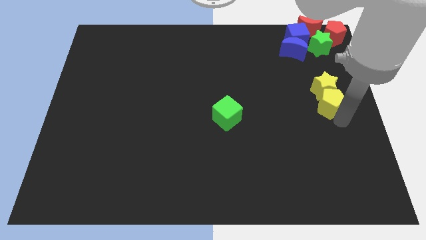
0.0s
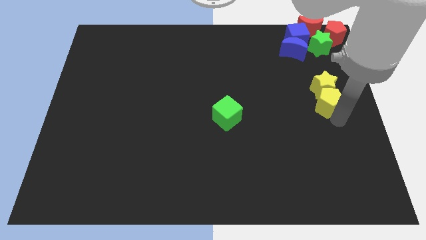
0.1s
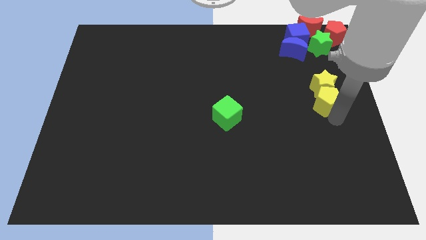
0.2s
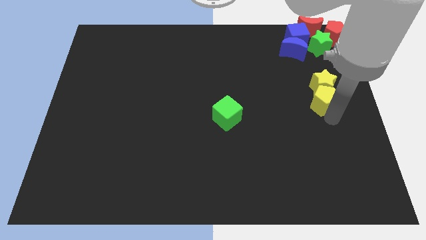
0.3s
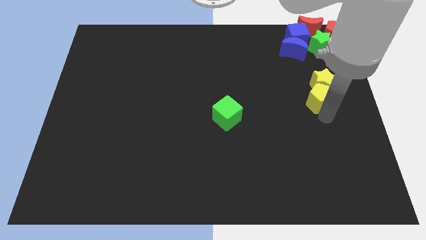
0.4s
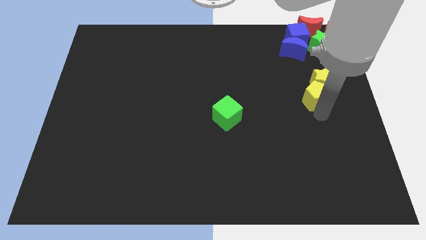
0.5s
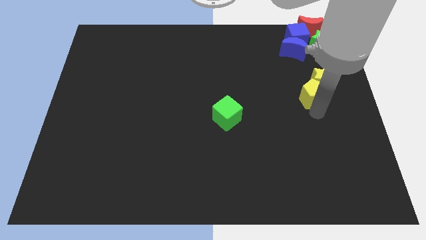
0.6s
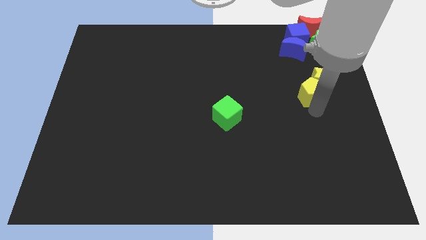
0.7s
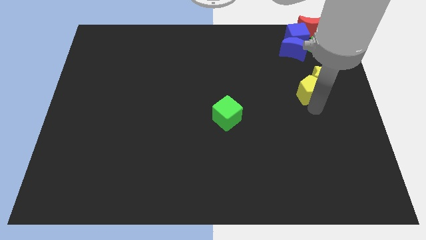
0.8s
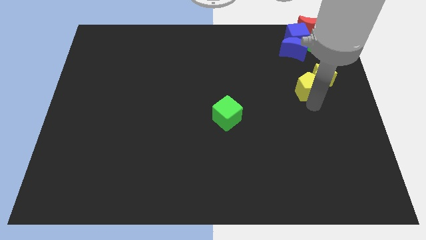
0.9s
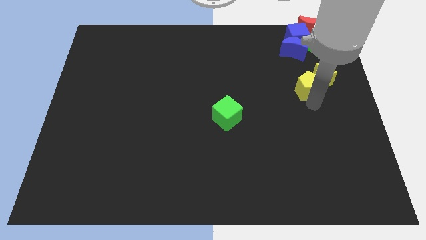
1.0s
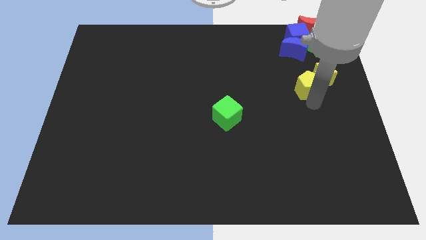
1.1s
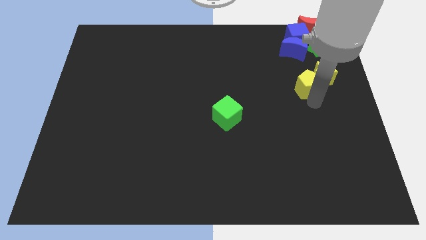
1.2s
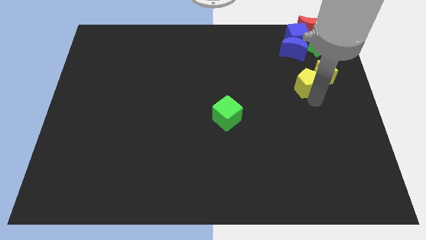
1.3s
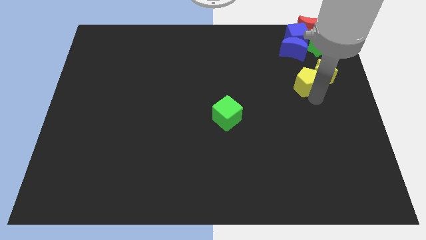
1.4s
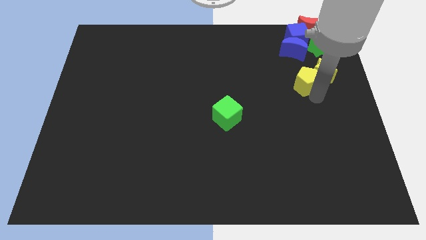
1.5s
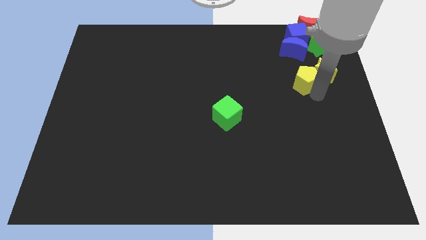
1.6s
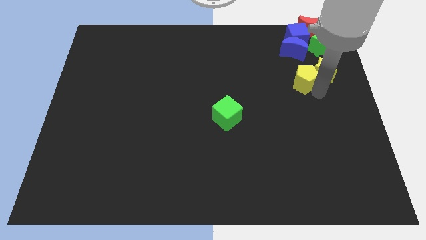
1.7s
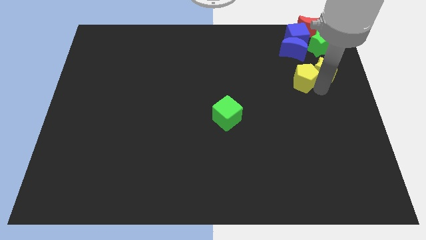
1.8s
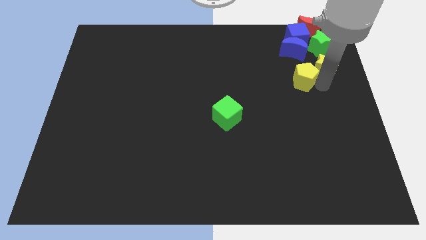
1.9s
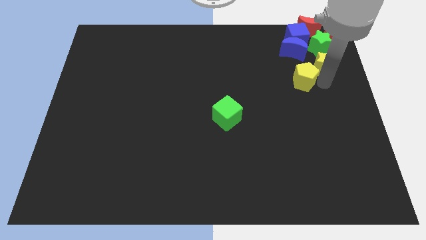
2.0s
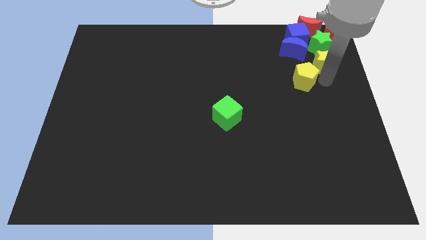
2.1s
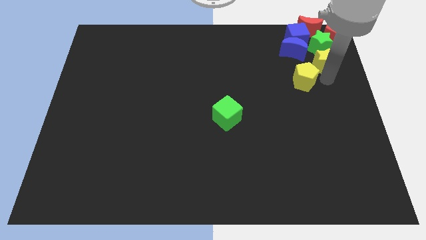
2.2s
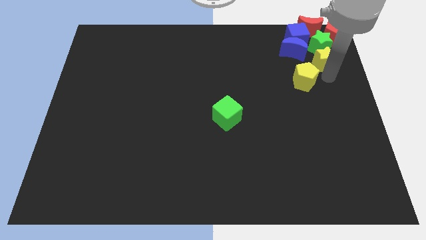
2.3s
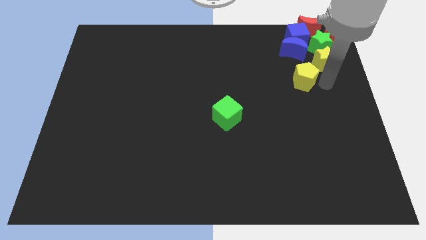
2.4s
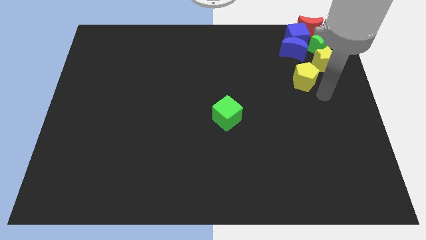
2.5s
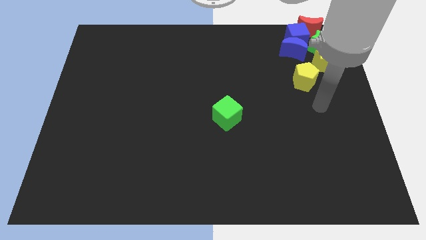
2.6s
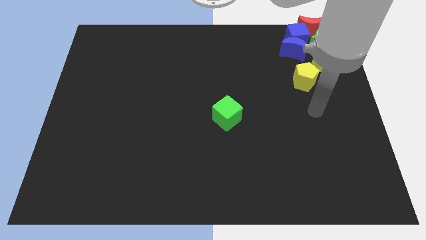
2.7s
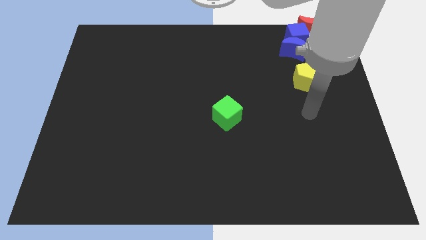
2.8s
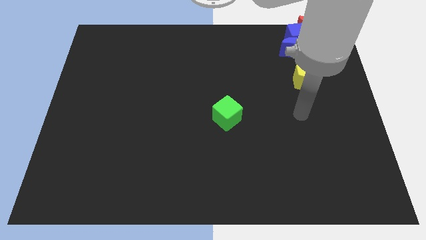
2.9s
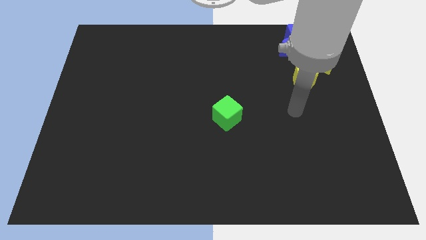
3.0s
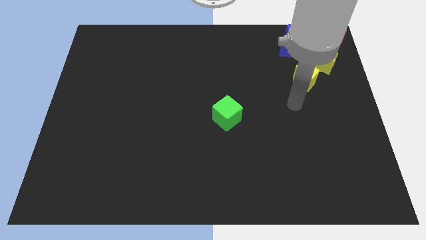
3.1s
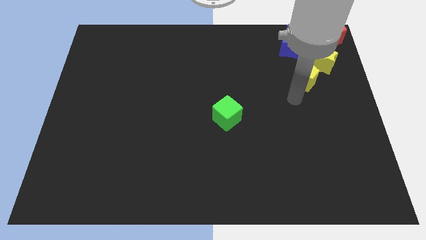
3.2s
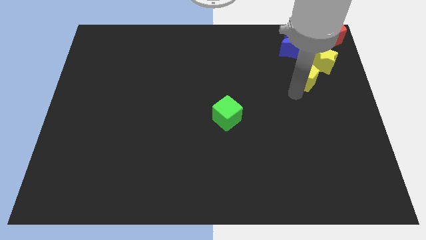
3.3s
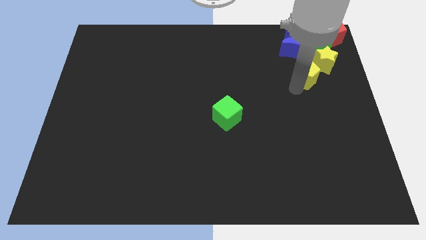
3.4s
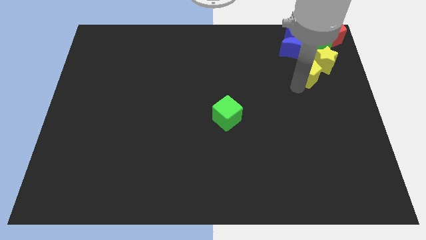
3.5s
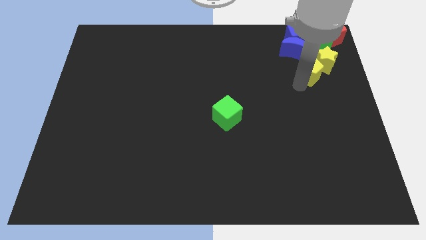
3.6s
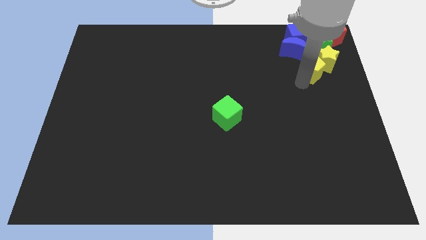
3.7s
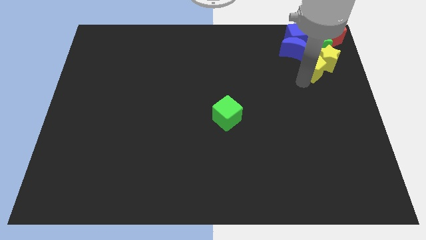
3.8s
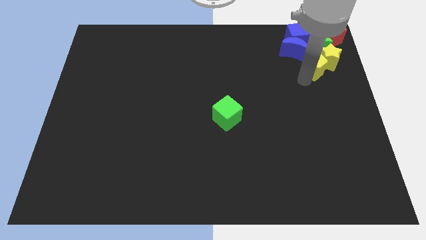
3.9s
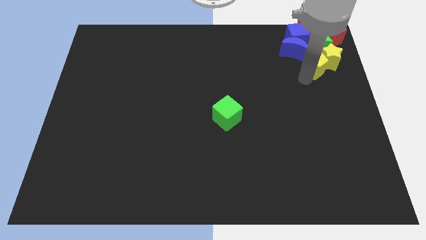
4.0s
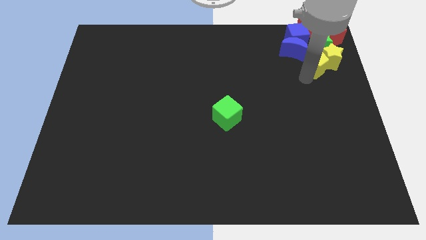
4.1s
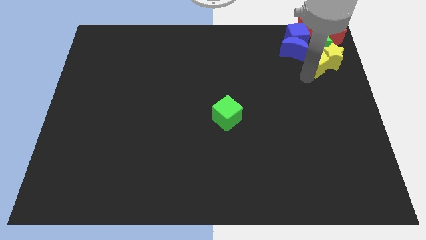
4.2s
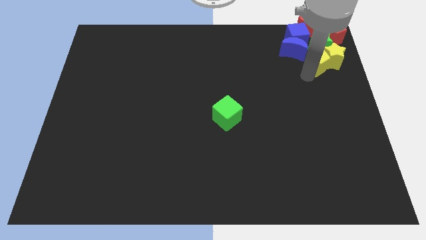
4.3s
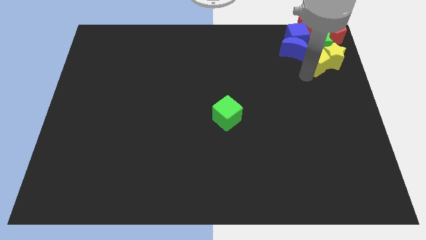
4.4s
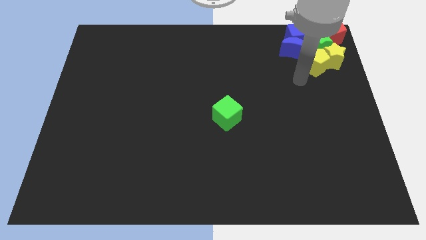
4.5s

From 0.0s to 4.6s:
push the yellow pentagon along with the yellow star to the bottom of green star

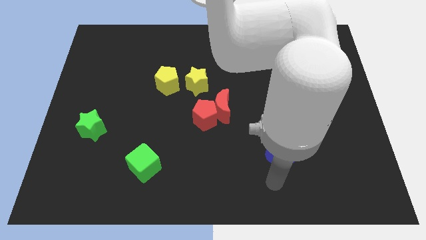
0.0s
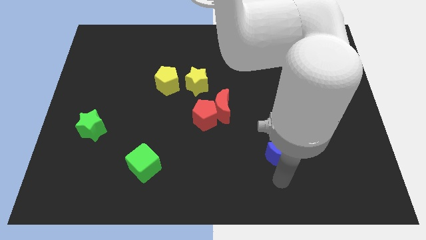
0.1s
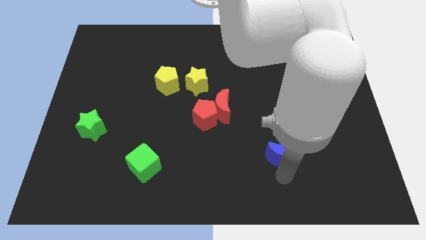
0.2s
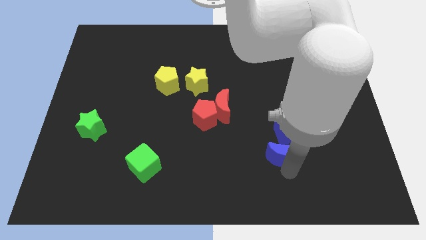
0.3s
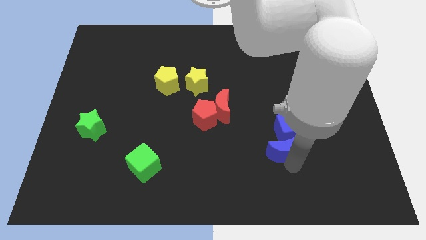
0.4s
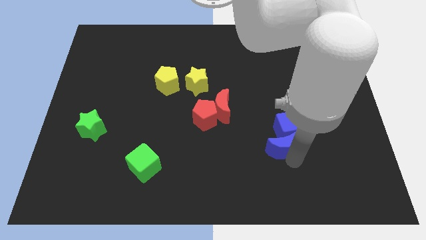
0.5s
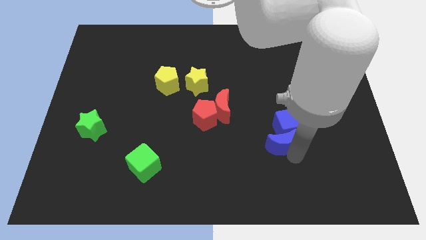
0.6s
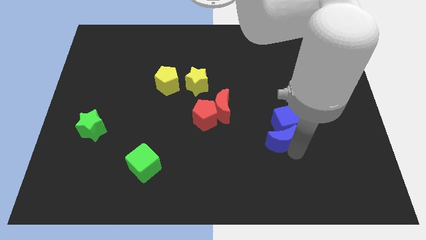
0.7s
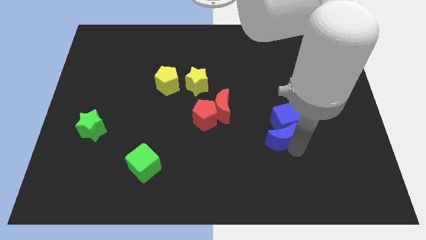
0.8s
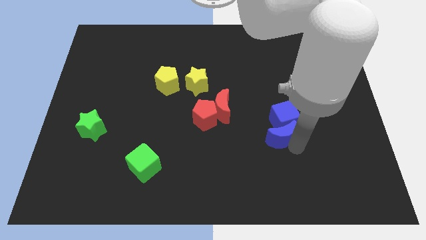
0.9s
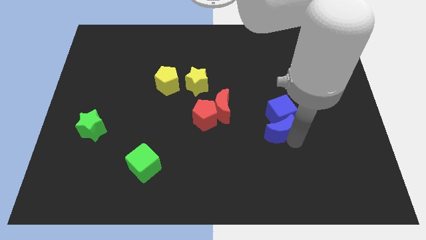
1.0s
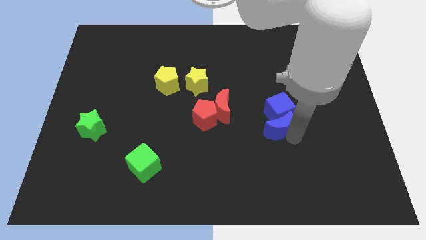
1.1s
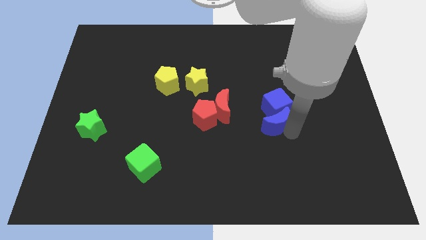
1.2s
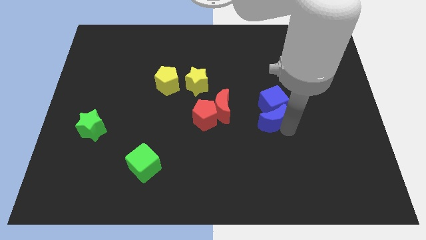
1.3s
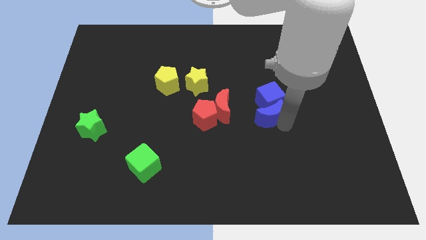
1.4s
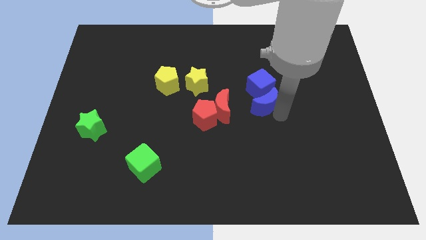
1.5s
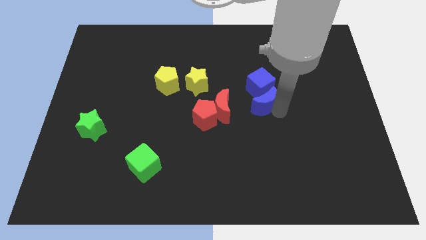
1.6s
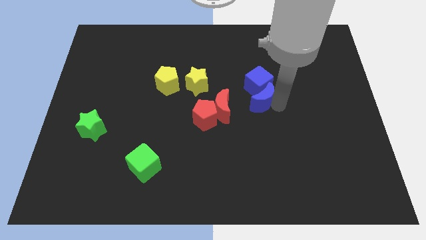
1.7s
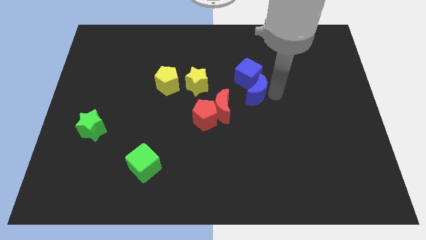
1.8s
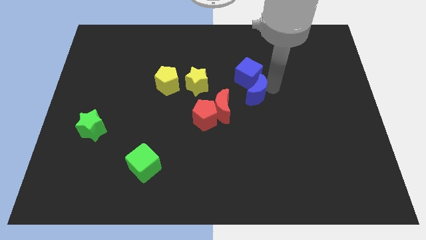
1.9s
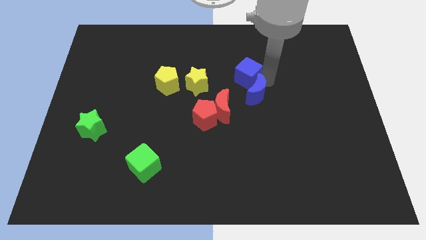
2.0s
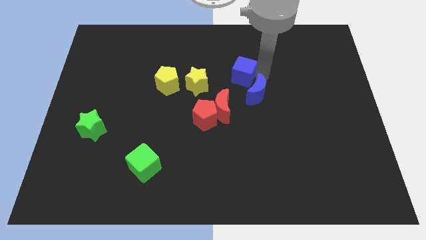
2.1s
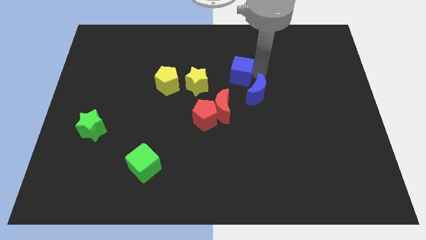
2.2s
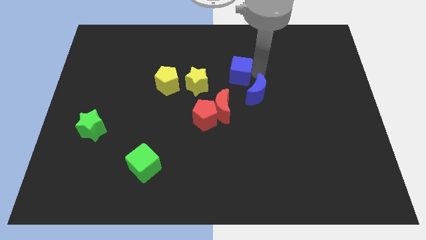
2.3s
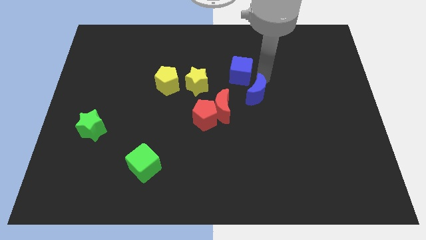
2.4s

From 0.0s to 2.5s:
push the blue blocks slightly up

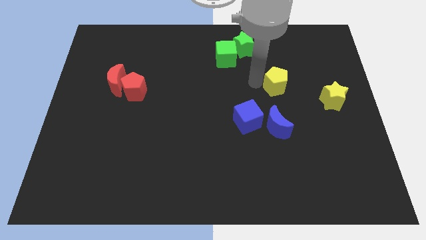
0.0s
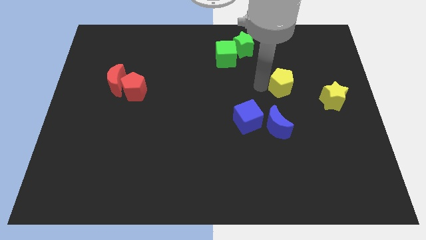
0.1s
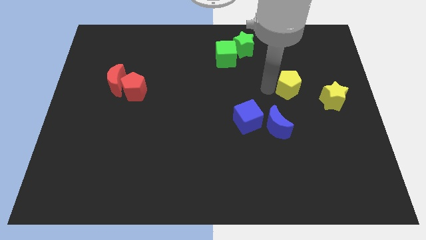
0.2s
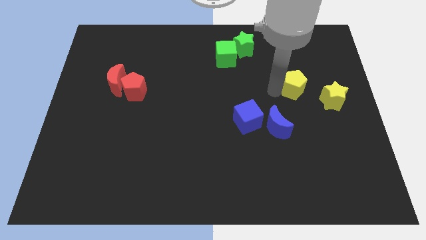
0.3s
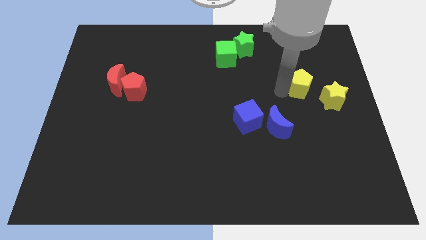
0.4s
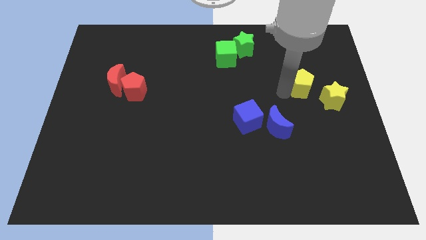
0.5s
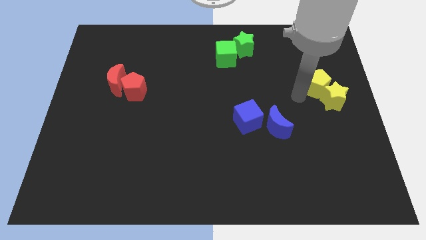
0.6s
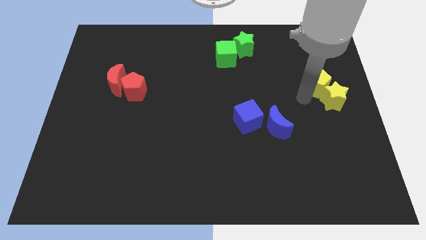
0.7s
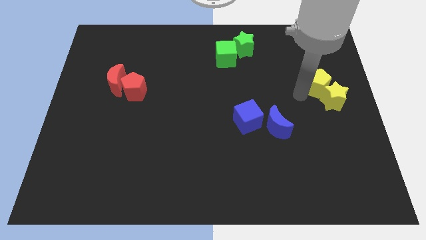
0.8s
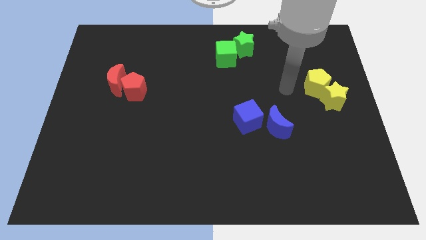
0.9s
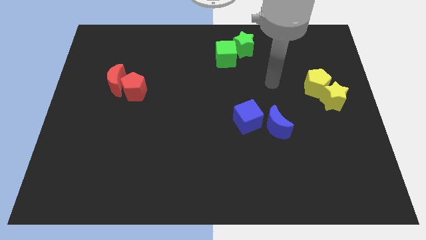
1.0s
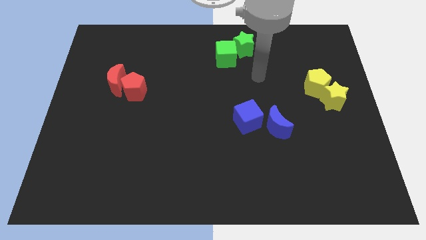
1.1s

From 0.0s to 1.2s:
place yellow pentagon below yellow star

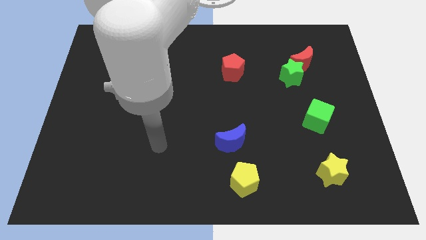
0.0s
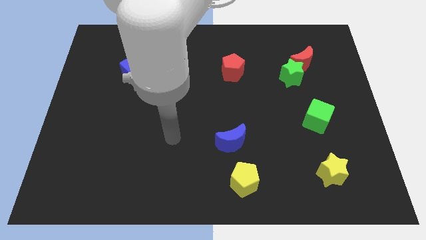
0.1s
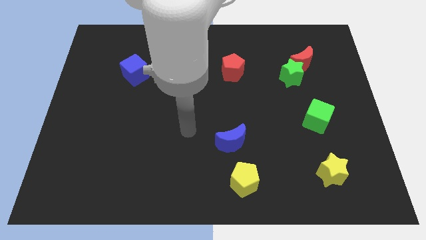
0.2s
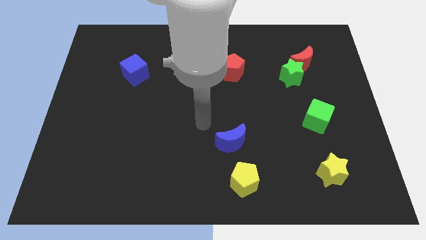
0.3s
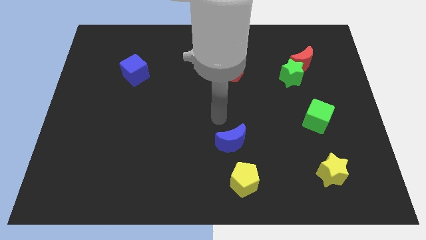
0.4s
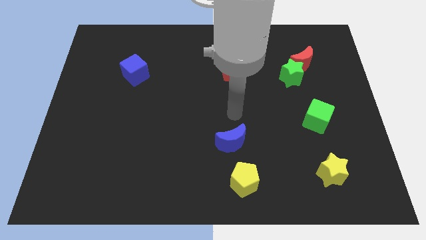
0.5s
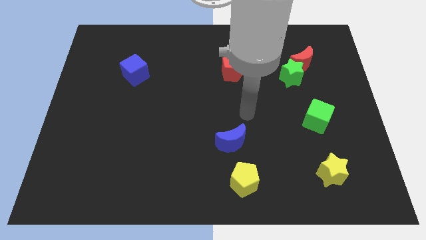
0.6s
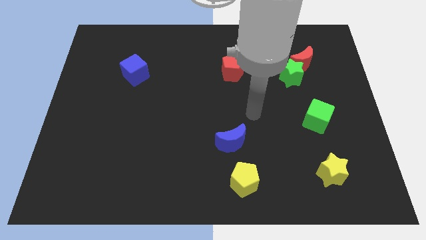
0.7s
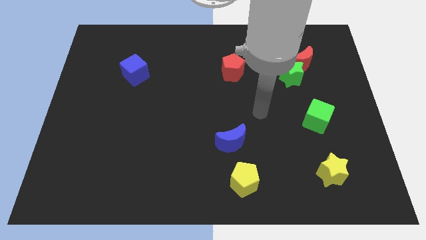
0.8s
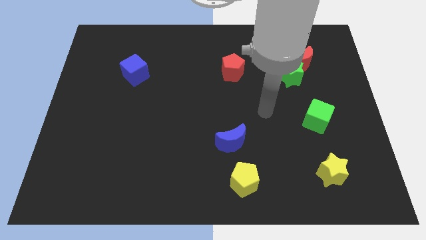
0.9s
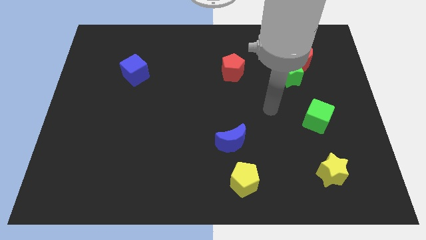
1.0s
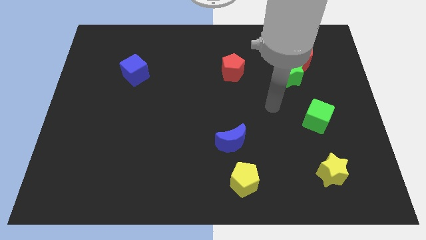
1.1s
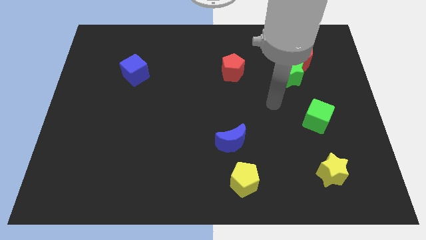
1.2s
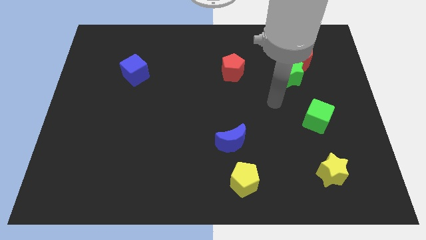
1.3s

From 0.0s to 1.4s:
put your hand in between the red pentagon and green cube
